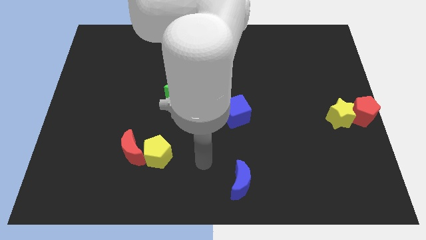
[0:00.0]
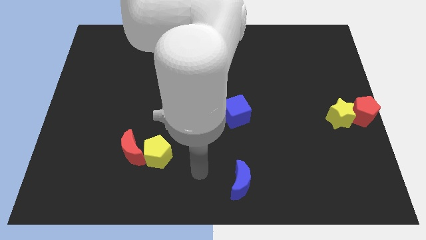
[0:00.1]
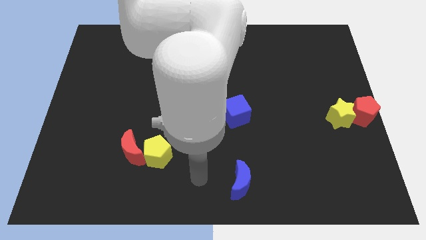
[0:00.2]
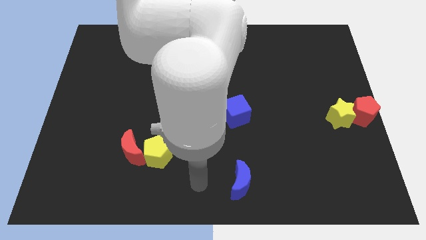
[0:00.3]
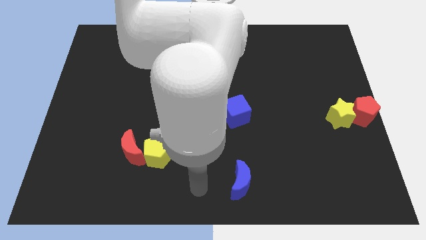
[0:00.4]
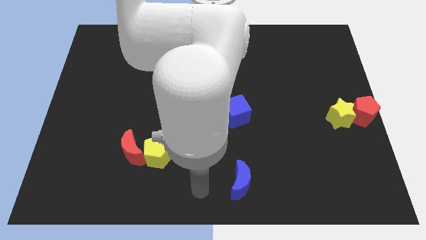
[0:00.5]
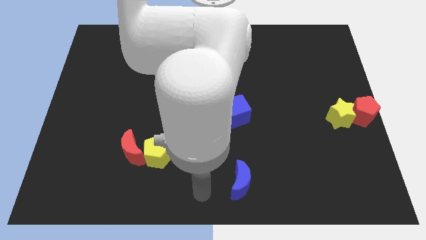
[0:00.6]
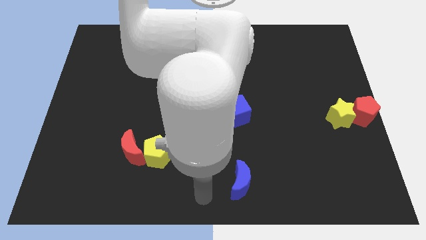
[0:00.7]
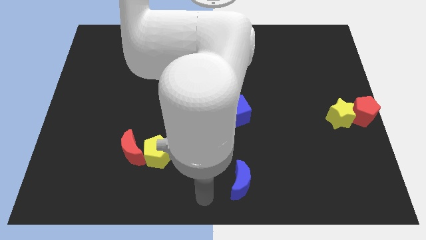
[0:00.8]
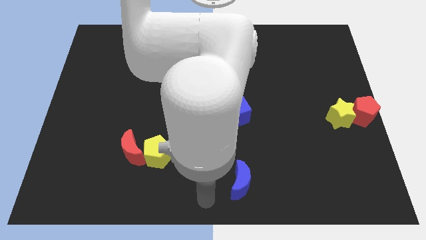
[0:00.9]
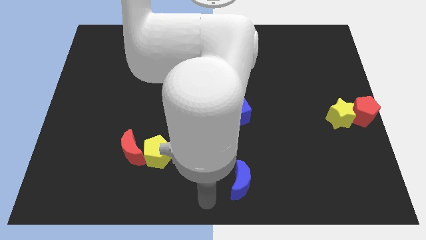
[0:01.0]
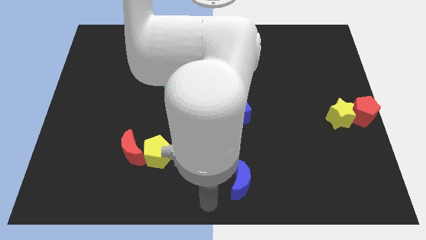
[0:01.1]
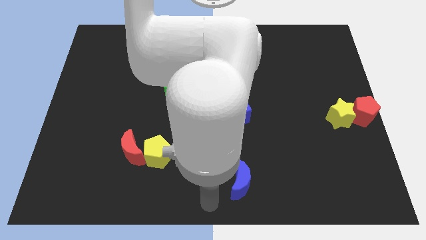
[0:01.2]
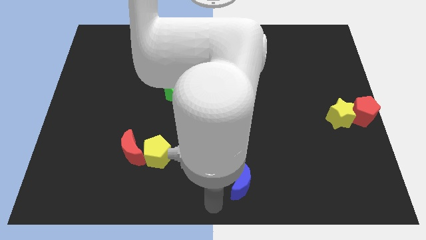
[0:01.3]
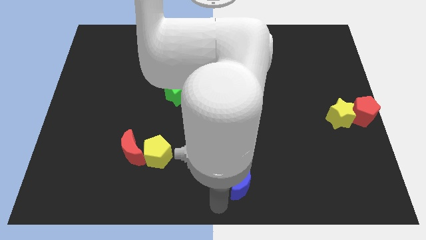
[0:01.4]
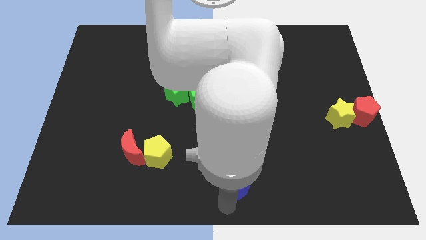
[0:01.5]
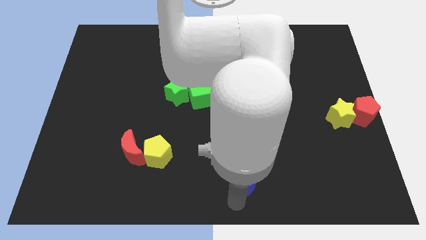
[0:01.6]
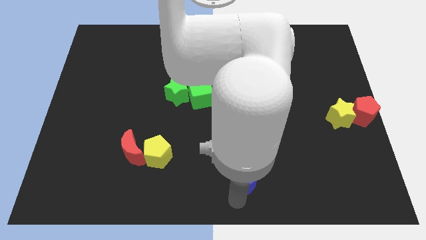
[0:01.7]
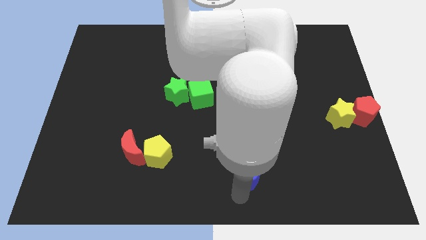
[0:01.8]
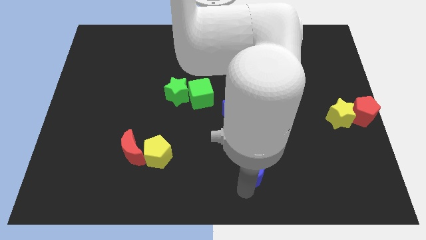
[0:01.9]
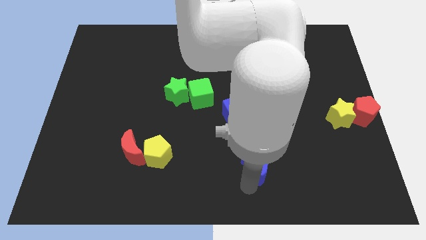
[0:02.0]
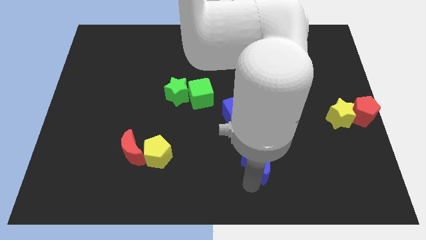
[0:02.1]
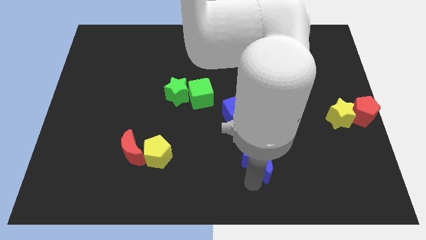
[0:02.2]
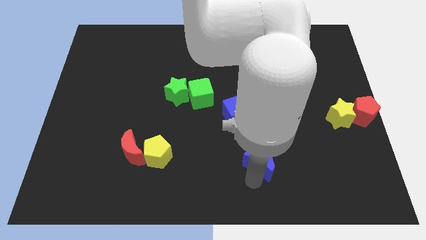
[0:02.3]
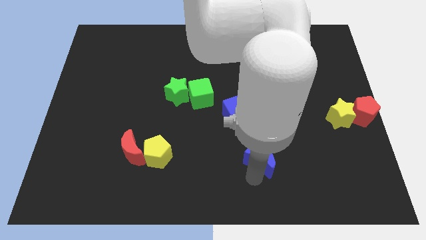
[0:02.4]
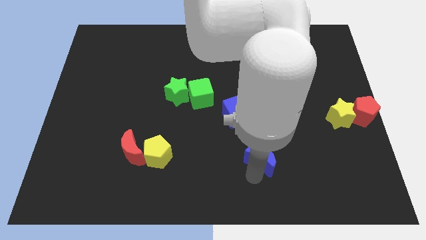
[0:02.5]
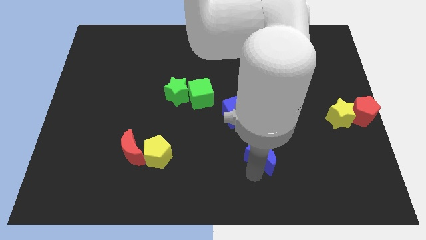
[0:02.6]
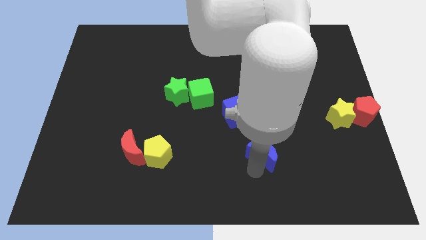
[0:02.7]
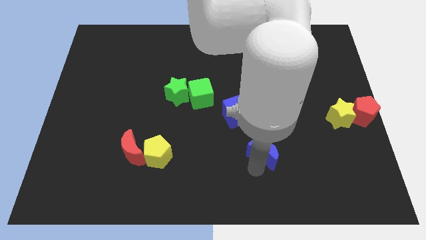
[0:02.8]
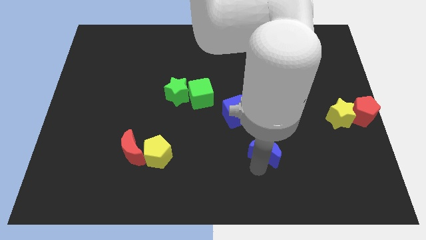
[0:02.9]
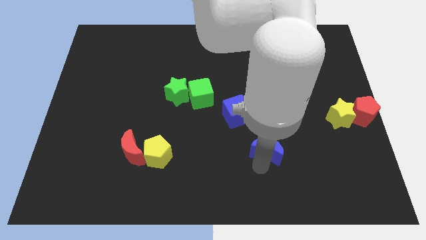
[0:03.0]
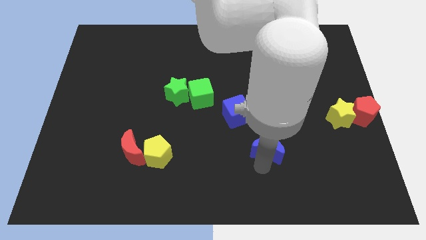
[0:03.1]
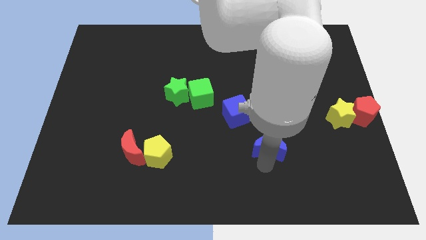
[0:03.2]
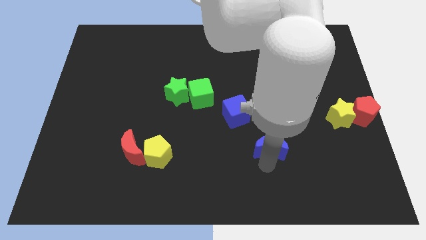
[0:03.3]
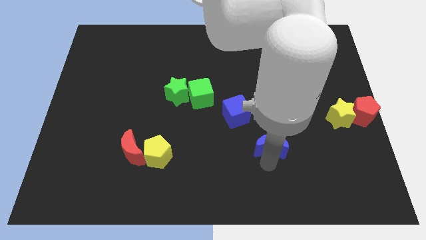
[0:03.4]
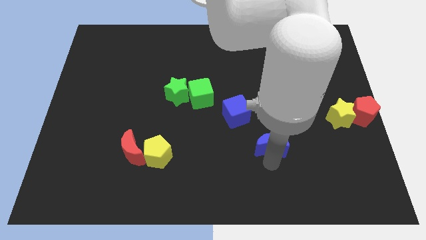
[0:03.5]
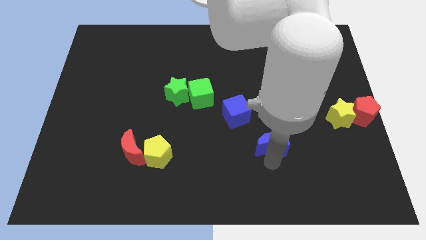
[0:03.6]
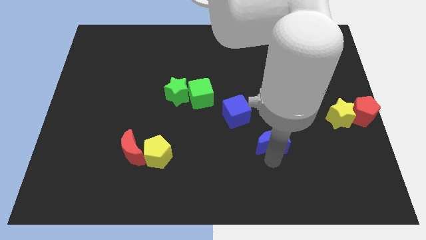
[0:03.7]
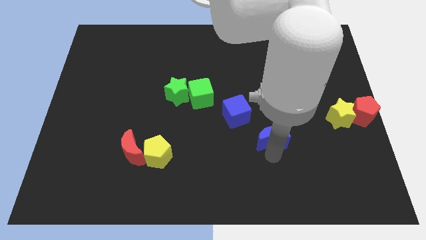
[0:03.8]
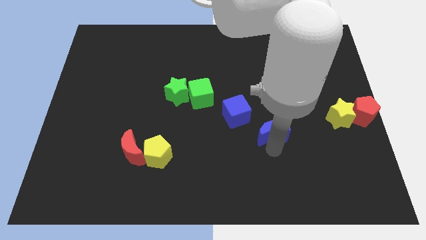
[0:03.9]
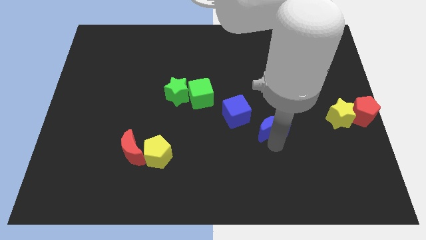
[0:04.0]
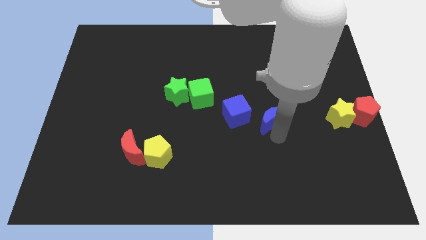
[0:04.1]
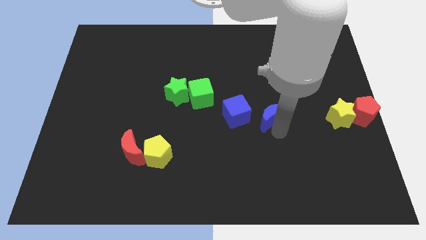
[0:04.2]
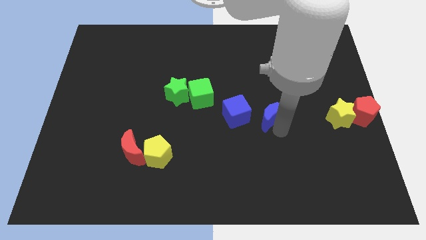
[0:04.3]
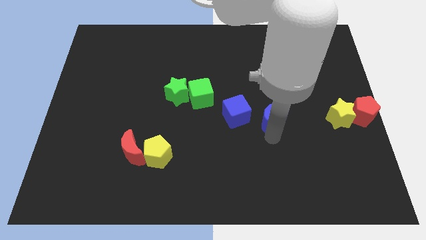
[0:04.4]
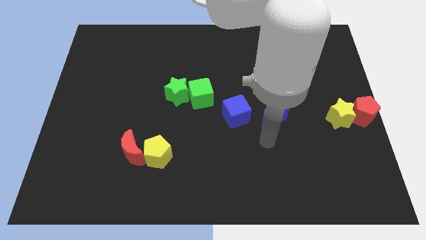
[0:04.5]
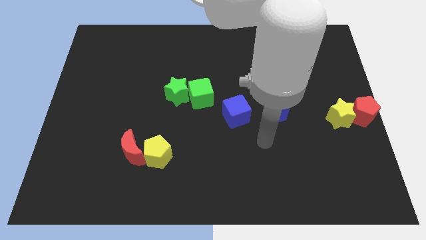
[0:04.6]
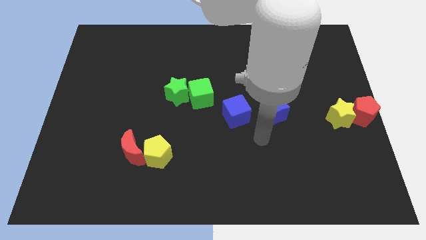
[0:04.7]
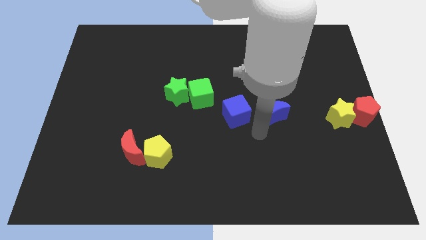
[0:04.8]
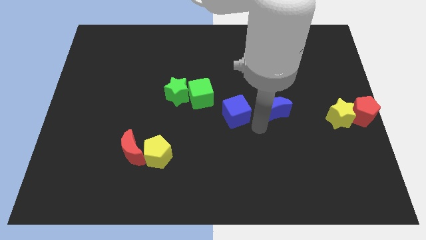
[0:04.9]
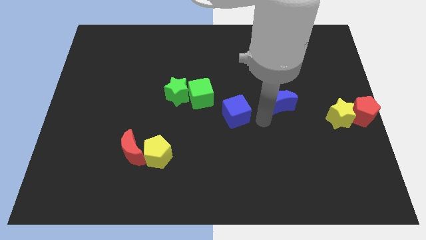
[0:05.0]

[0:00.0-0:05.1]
slide the blue moon to the right of the blue cube

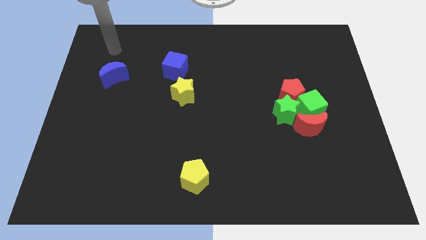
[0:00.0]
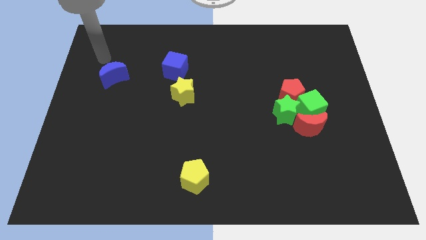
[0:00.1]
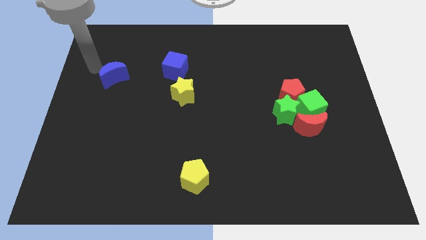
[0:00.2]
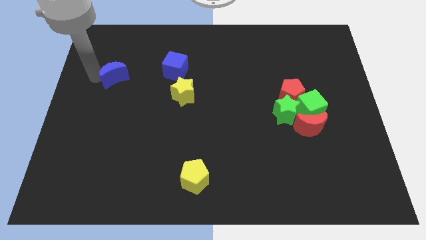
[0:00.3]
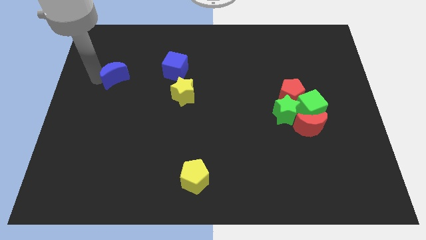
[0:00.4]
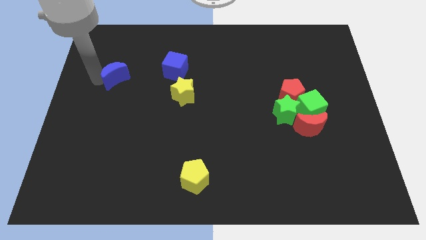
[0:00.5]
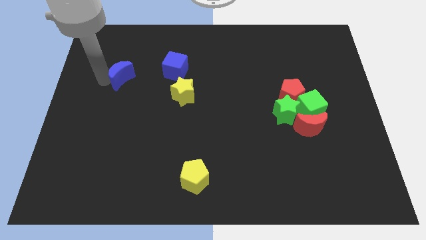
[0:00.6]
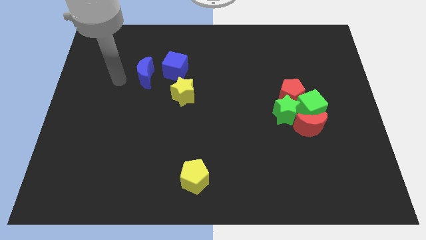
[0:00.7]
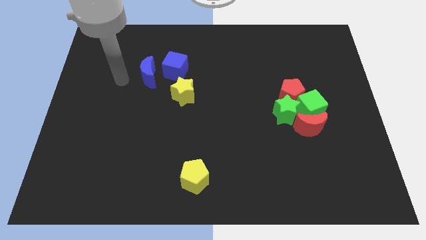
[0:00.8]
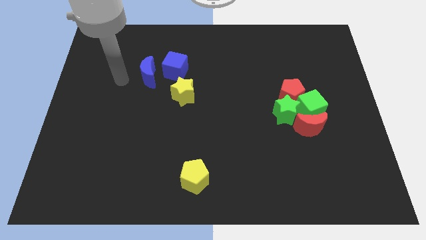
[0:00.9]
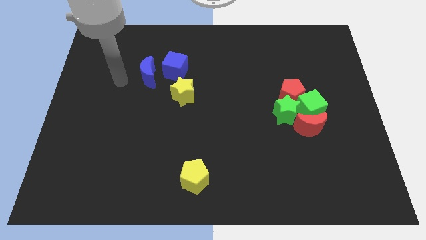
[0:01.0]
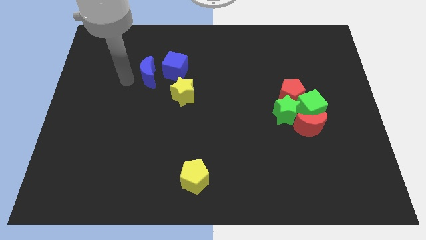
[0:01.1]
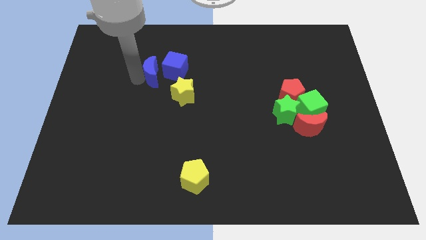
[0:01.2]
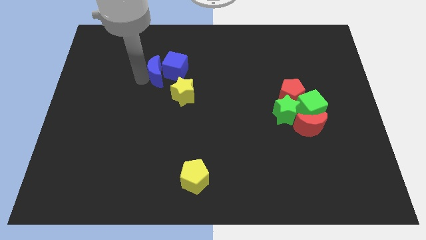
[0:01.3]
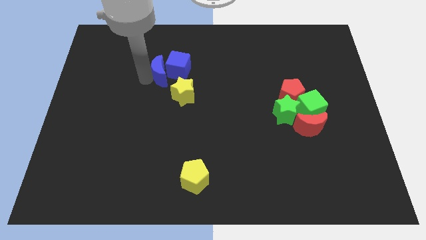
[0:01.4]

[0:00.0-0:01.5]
move the blue crescent to the left of the blue cube

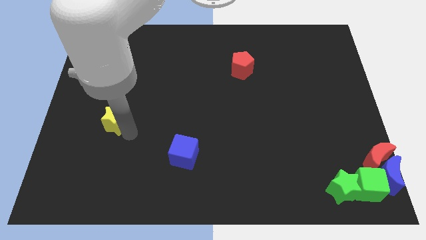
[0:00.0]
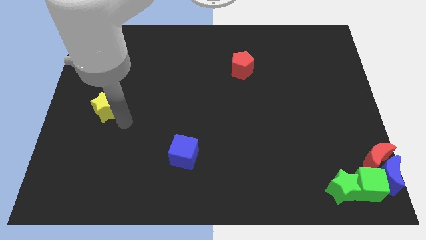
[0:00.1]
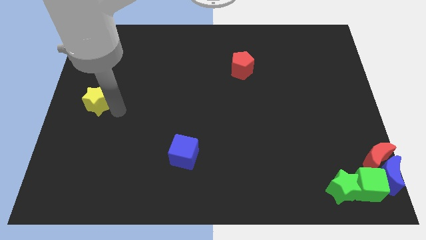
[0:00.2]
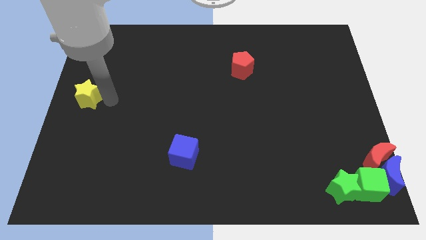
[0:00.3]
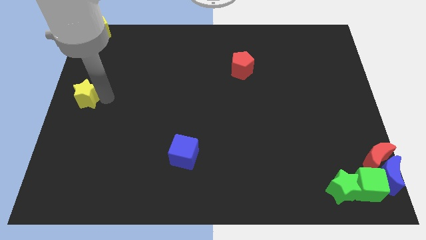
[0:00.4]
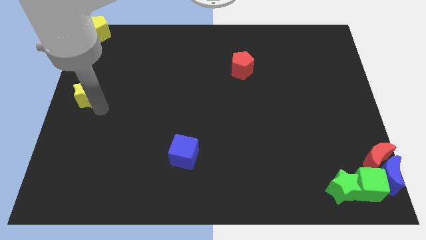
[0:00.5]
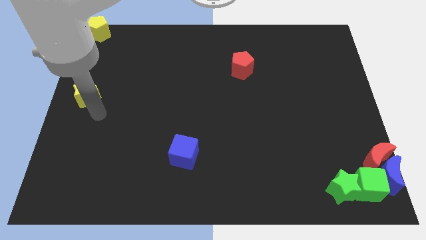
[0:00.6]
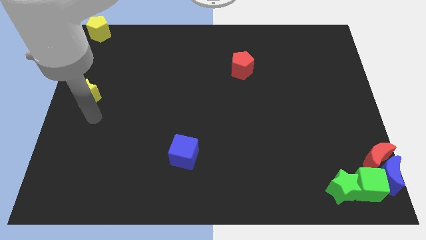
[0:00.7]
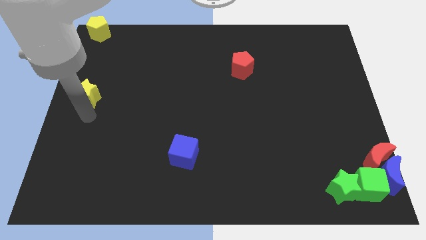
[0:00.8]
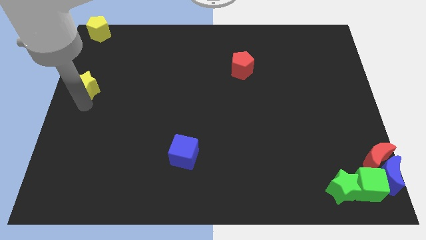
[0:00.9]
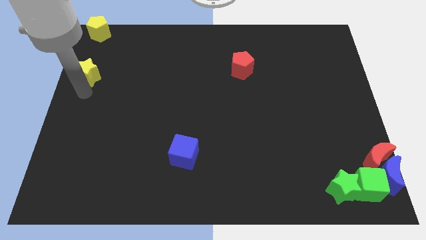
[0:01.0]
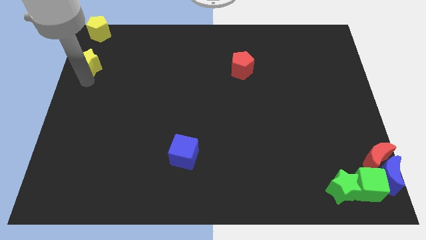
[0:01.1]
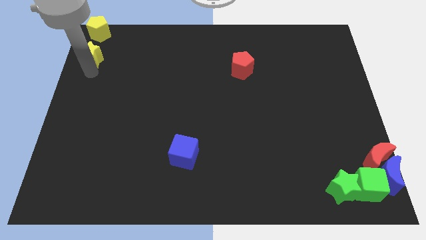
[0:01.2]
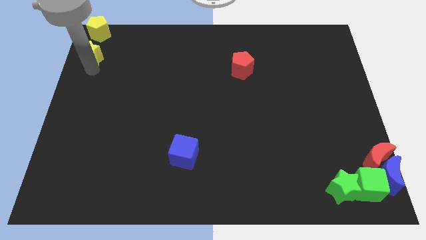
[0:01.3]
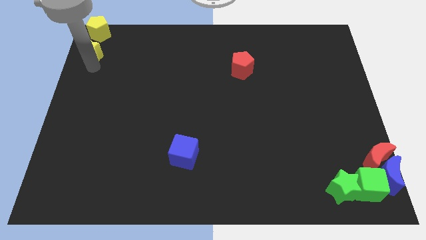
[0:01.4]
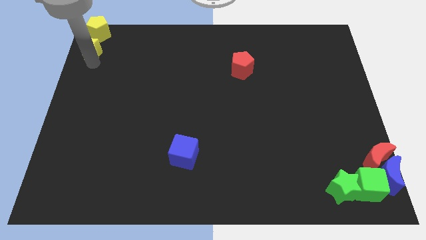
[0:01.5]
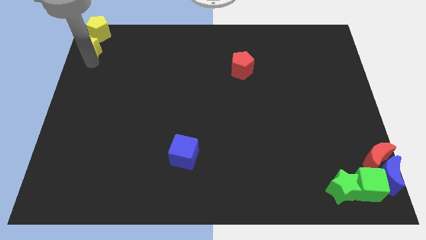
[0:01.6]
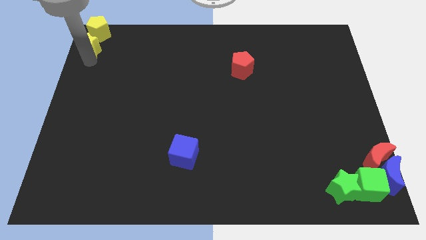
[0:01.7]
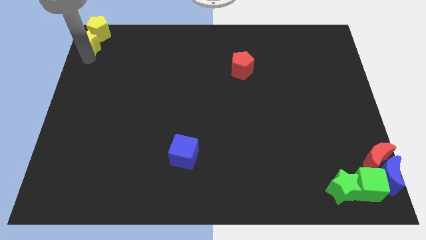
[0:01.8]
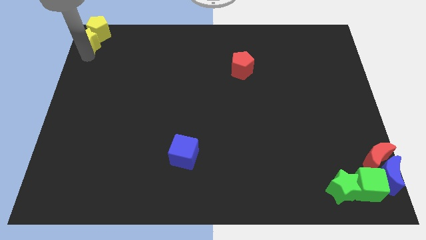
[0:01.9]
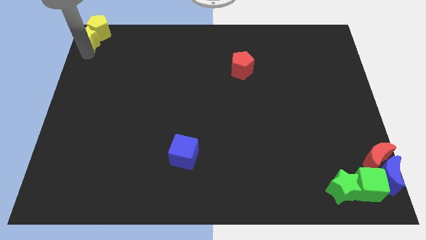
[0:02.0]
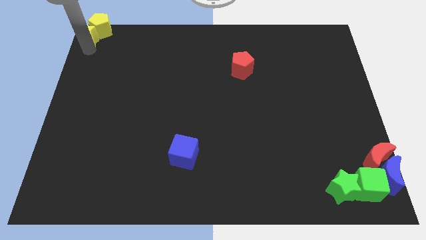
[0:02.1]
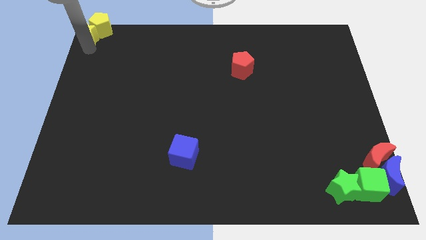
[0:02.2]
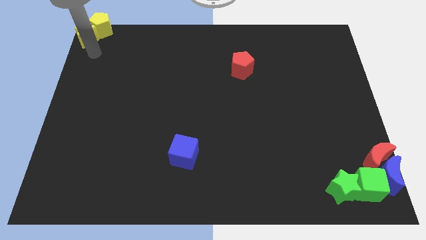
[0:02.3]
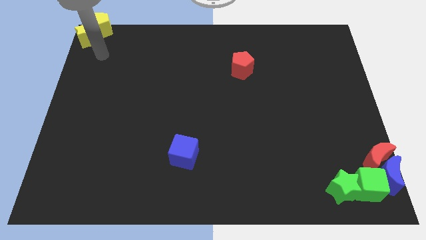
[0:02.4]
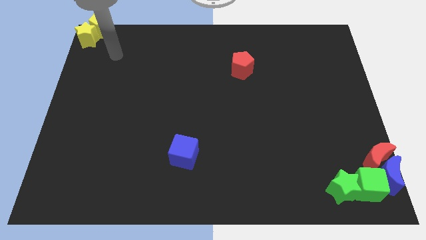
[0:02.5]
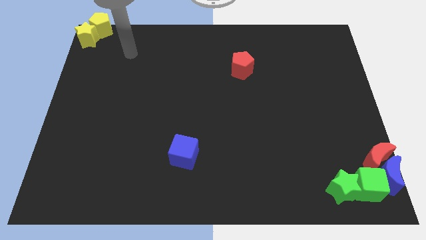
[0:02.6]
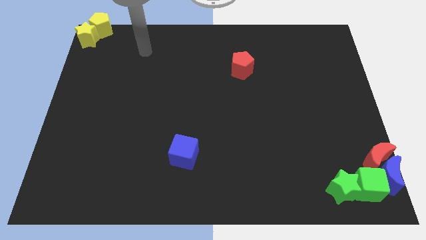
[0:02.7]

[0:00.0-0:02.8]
push the yellow star into the yellow pentagon
